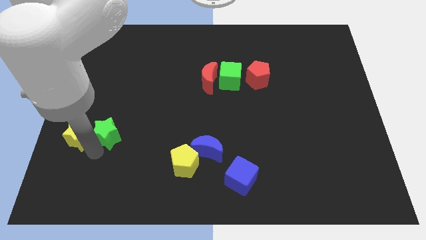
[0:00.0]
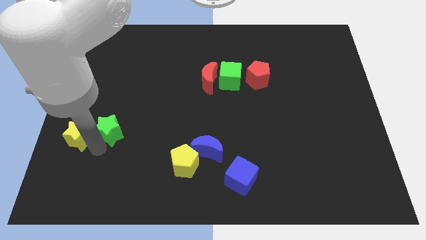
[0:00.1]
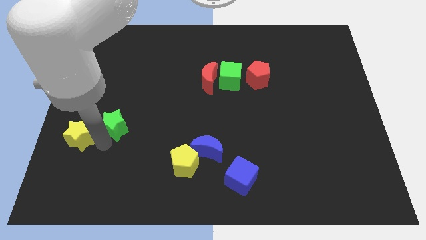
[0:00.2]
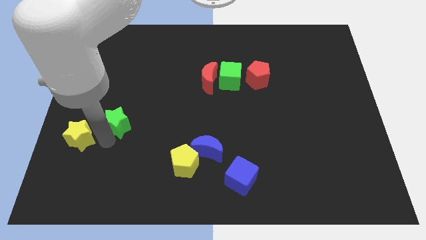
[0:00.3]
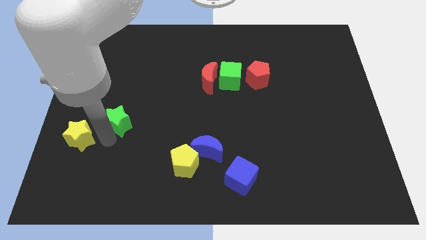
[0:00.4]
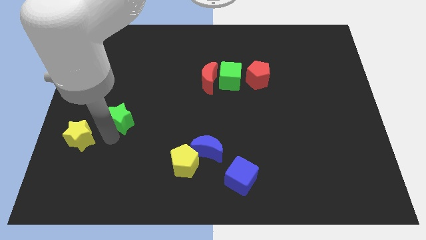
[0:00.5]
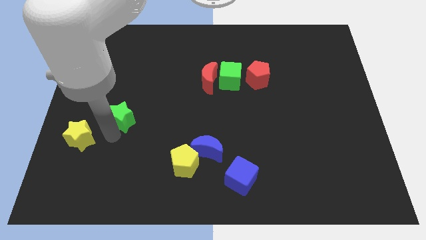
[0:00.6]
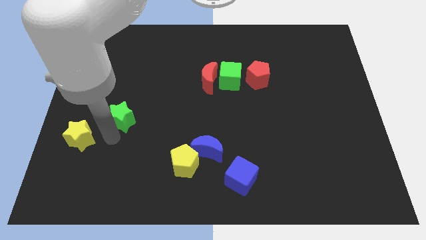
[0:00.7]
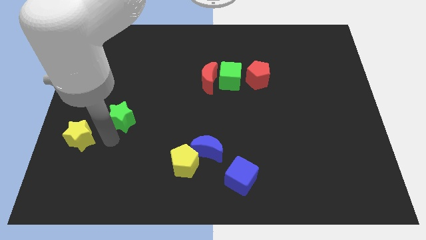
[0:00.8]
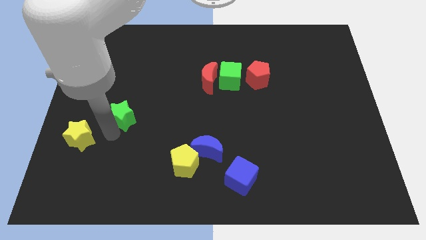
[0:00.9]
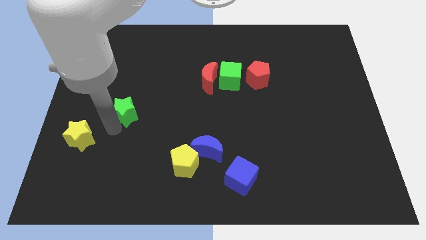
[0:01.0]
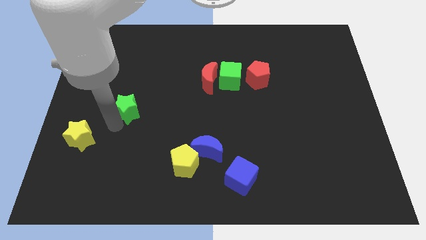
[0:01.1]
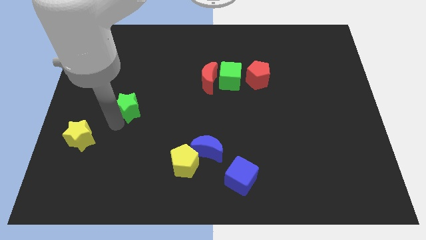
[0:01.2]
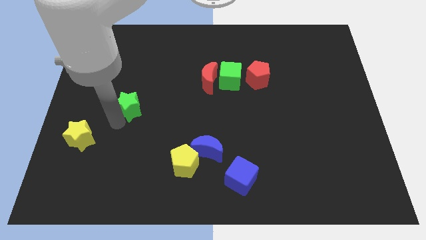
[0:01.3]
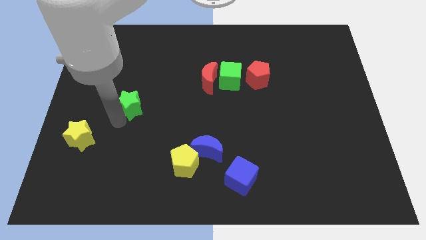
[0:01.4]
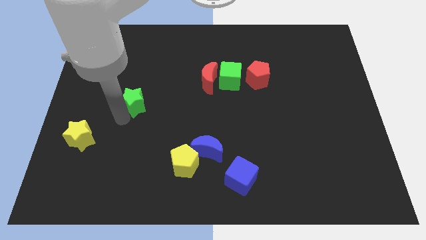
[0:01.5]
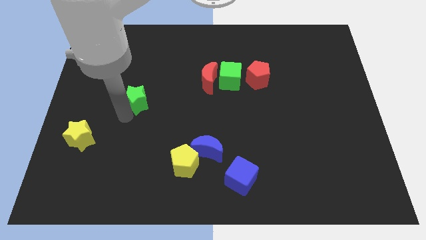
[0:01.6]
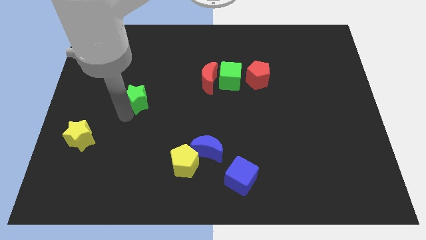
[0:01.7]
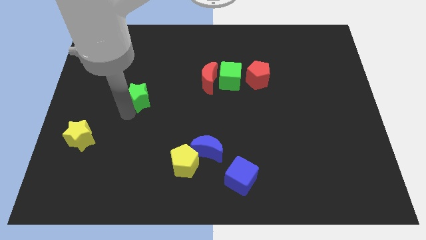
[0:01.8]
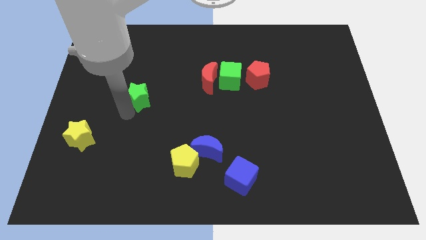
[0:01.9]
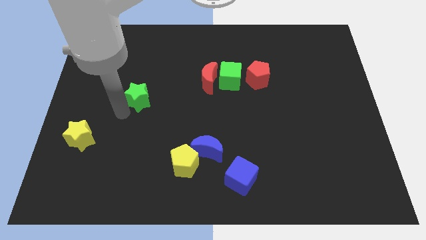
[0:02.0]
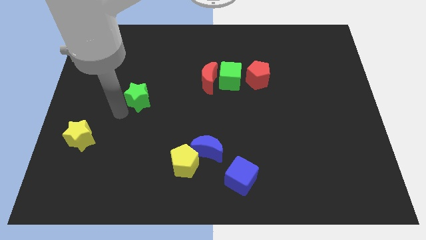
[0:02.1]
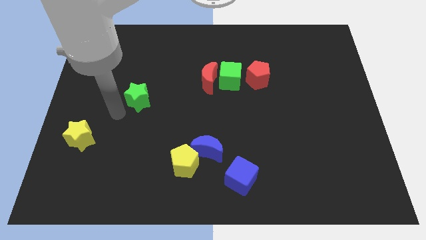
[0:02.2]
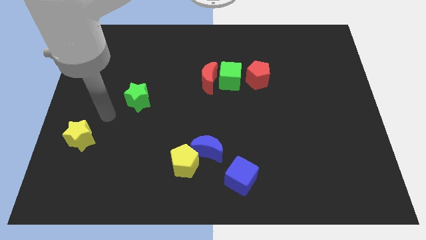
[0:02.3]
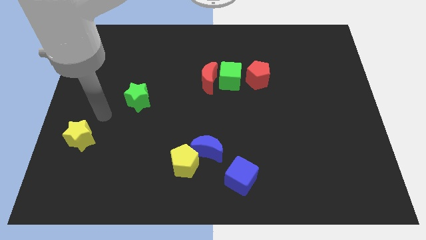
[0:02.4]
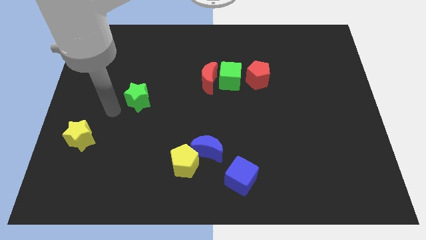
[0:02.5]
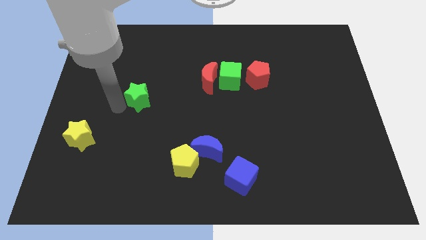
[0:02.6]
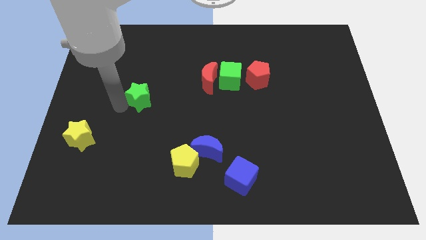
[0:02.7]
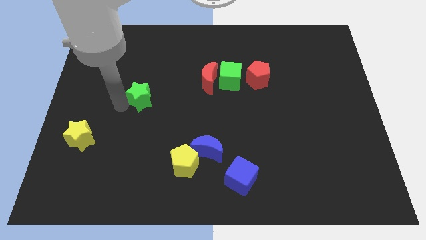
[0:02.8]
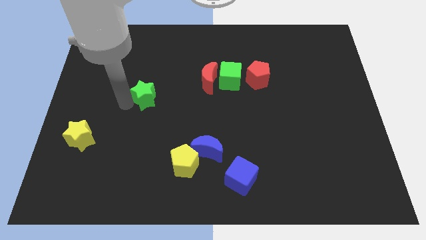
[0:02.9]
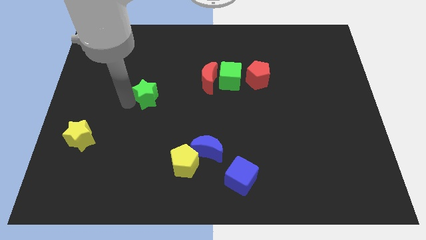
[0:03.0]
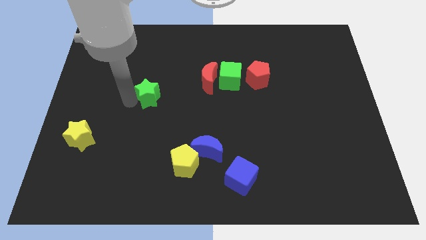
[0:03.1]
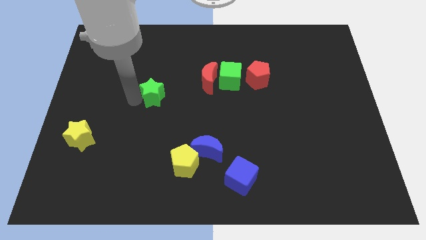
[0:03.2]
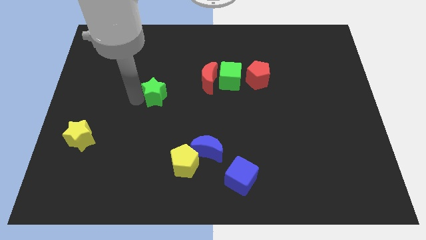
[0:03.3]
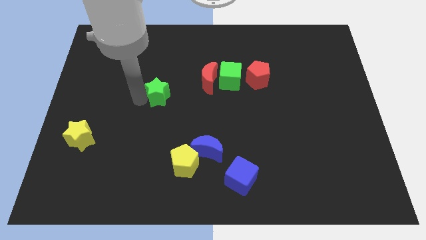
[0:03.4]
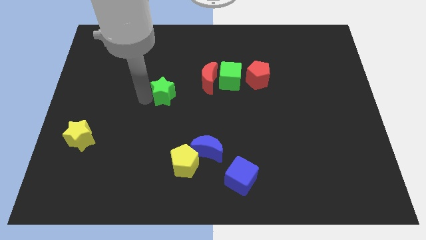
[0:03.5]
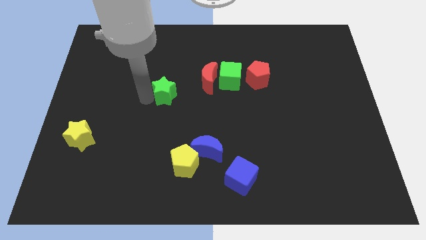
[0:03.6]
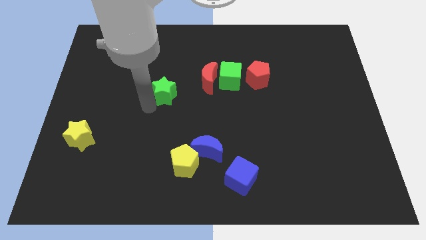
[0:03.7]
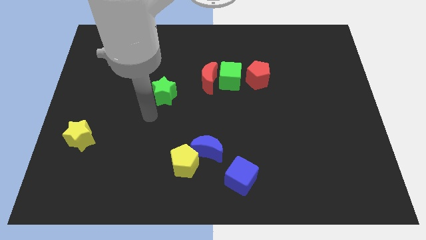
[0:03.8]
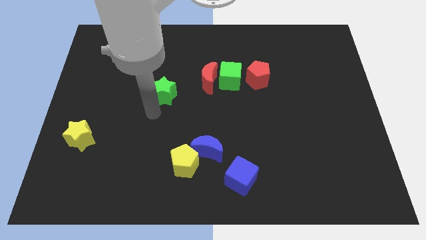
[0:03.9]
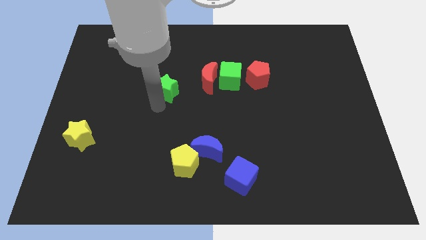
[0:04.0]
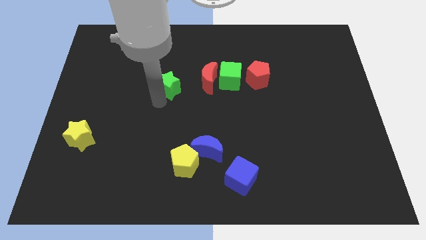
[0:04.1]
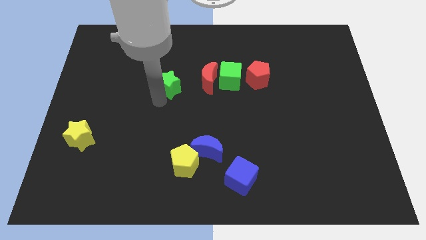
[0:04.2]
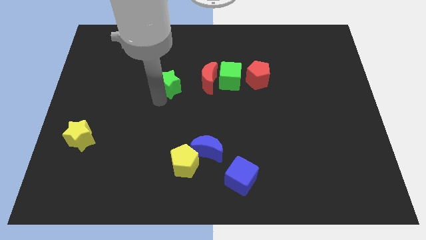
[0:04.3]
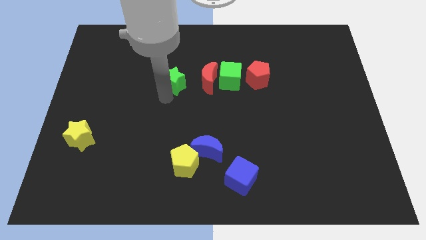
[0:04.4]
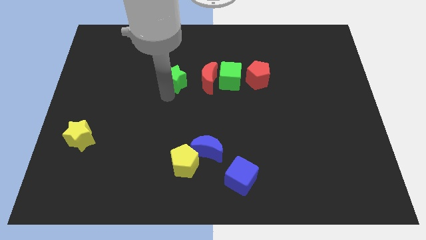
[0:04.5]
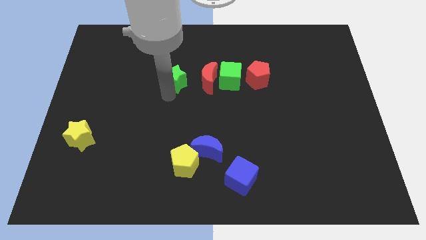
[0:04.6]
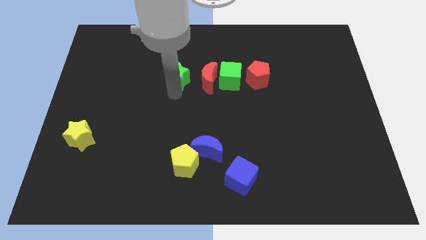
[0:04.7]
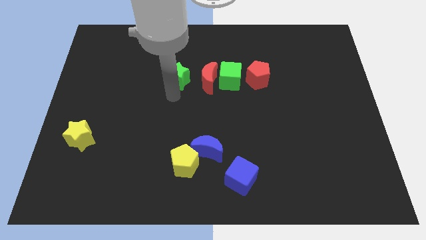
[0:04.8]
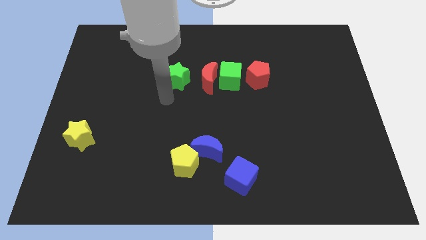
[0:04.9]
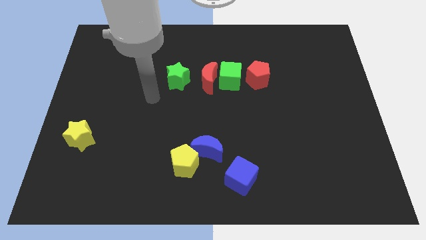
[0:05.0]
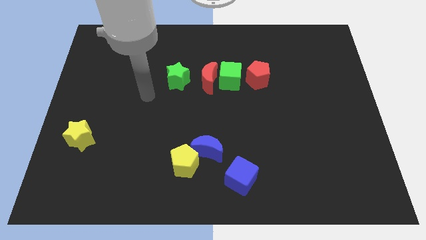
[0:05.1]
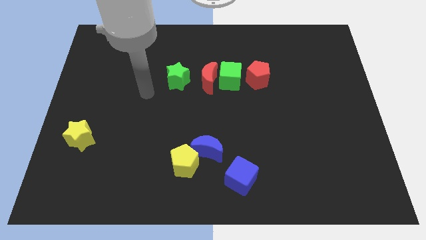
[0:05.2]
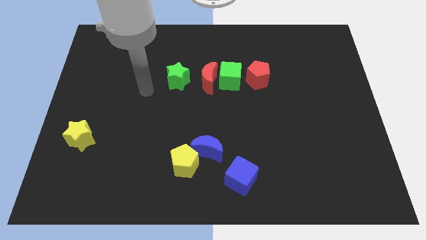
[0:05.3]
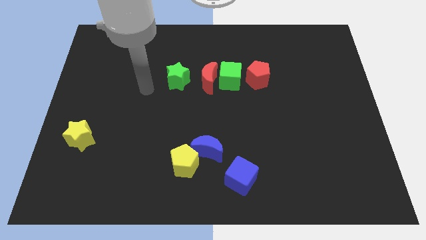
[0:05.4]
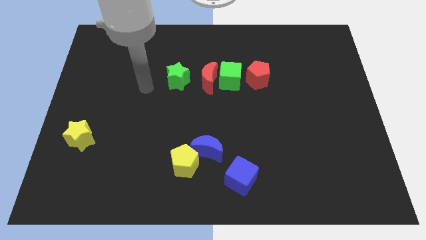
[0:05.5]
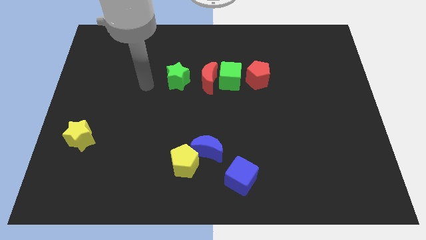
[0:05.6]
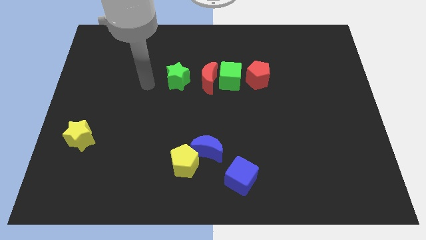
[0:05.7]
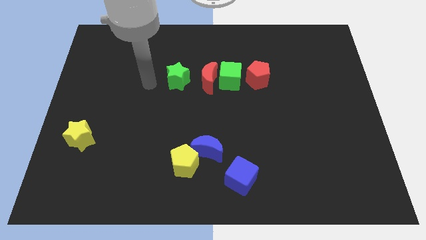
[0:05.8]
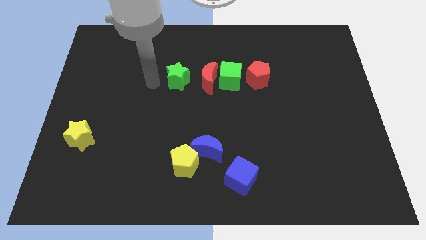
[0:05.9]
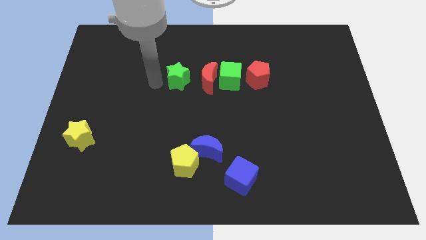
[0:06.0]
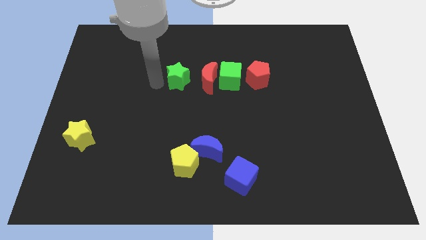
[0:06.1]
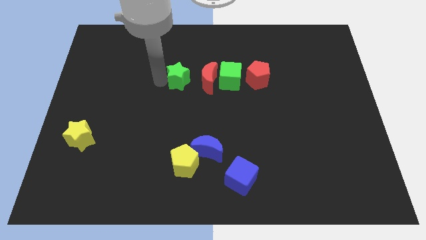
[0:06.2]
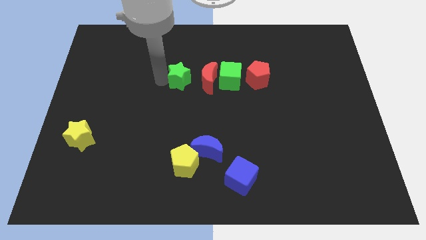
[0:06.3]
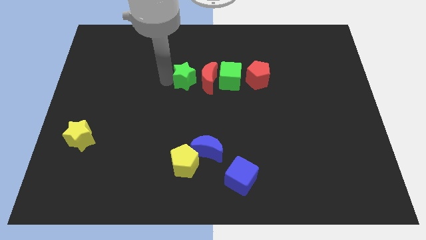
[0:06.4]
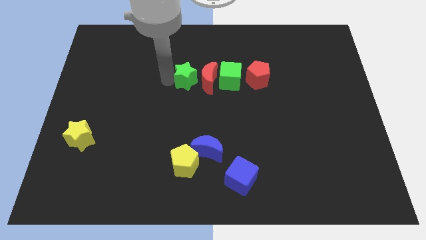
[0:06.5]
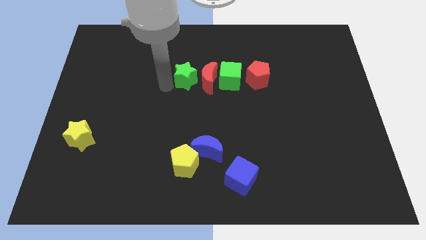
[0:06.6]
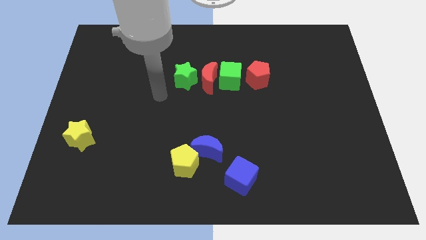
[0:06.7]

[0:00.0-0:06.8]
push the green star left to the red moon

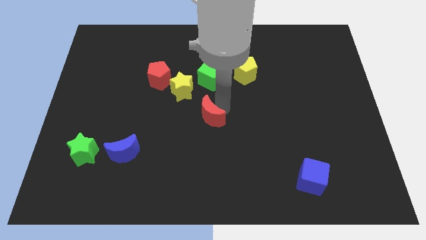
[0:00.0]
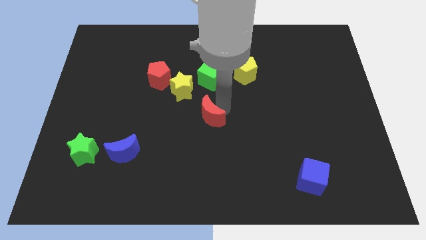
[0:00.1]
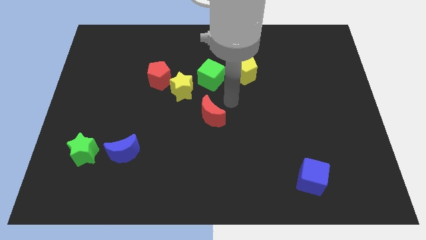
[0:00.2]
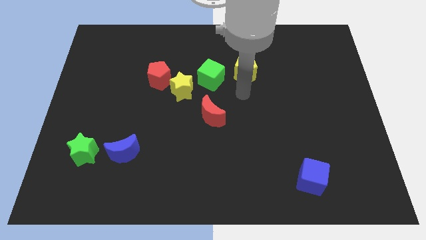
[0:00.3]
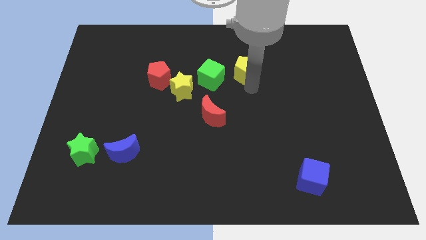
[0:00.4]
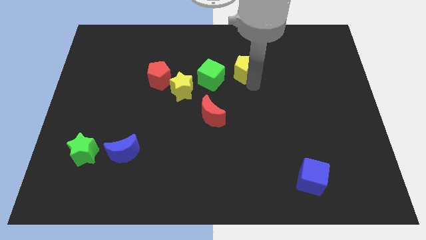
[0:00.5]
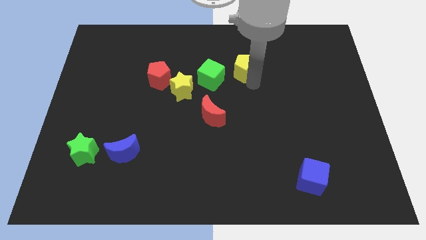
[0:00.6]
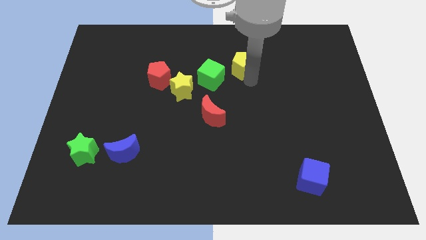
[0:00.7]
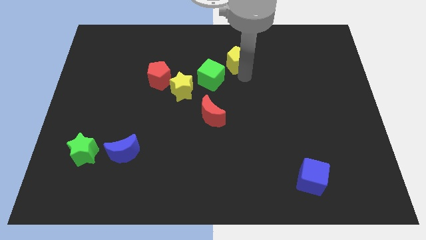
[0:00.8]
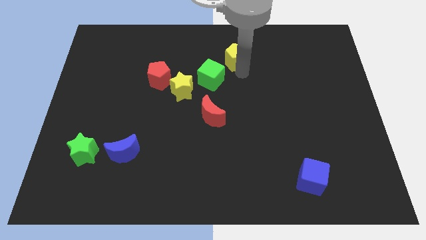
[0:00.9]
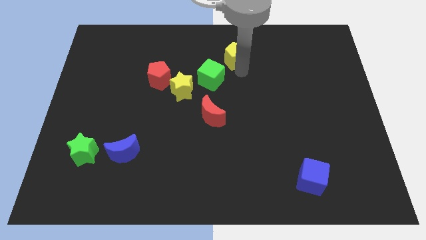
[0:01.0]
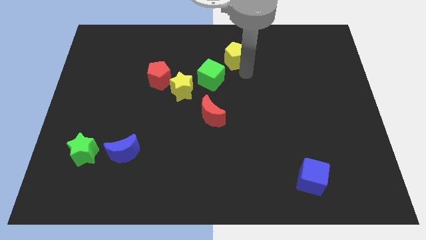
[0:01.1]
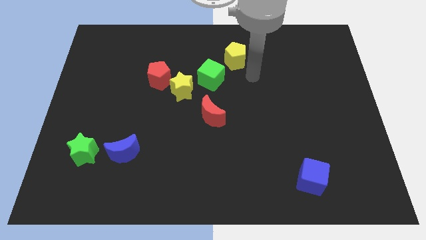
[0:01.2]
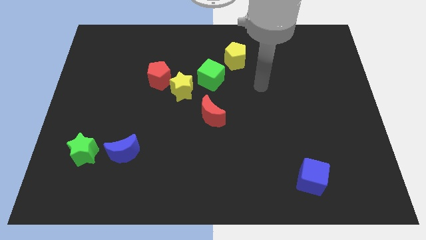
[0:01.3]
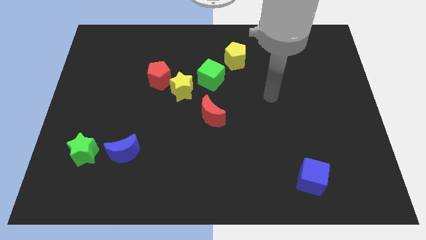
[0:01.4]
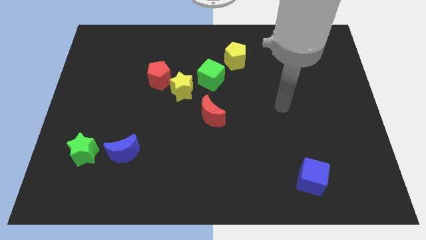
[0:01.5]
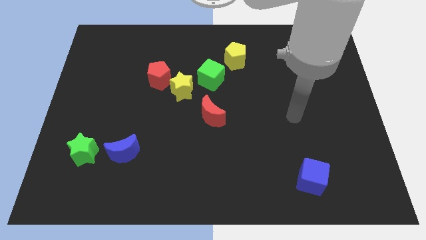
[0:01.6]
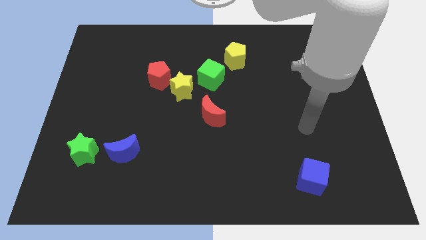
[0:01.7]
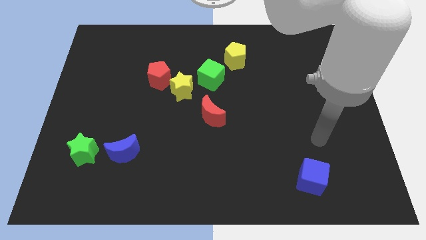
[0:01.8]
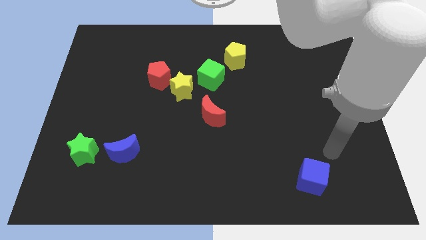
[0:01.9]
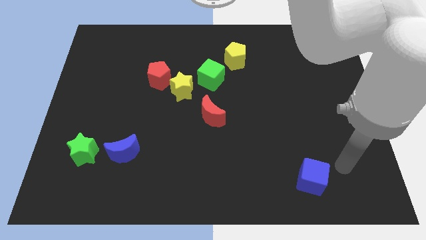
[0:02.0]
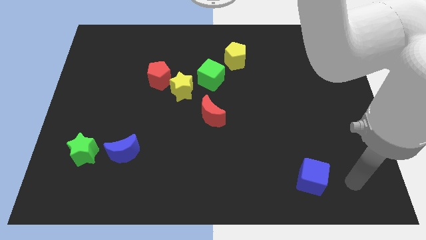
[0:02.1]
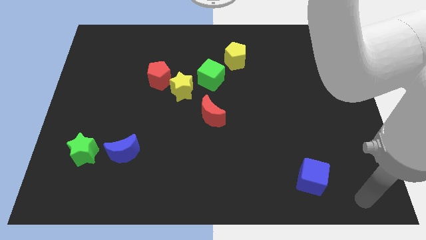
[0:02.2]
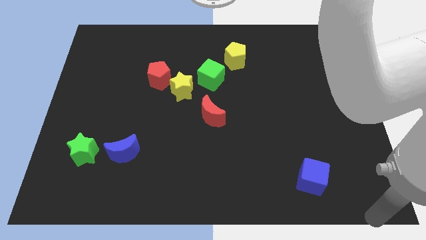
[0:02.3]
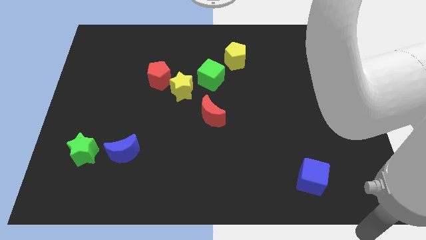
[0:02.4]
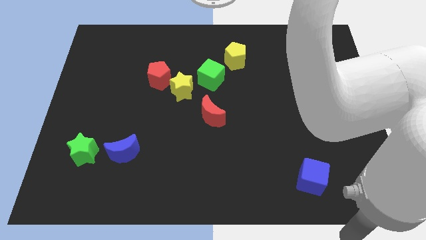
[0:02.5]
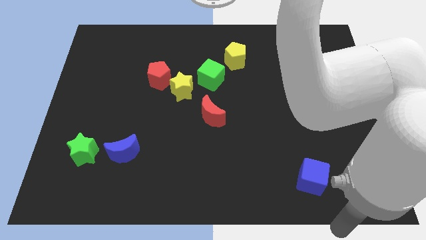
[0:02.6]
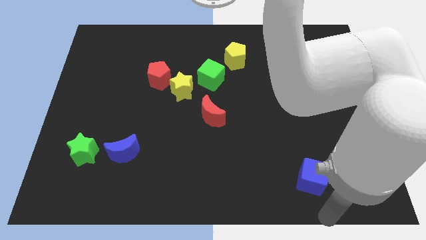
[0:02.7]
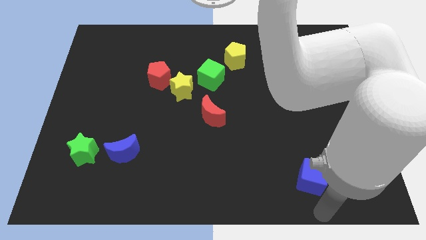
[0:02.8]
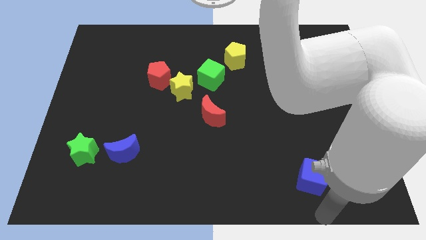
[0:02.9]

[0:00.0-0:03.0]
push the yellow pentagon to the top right side of the green cube
